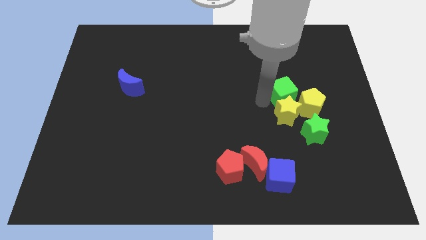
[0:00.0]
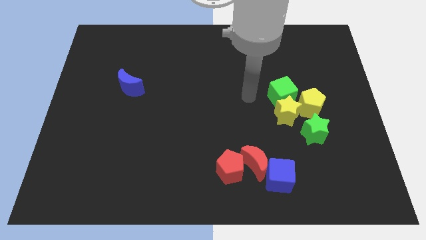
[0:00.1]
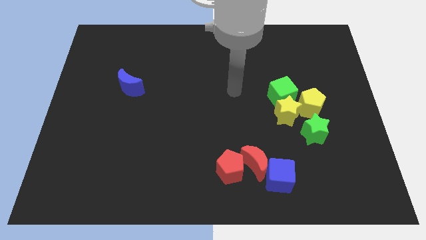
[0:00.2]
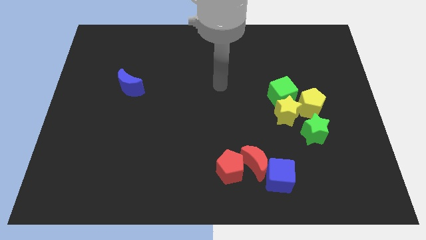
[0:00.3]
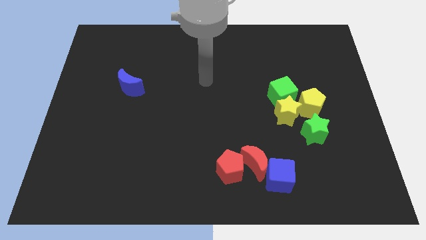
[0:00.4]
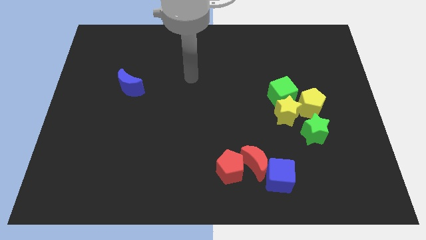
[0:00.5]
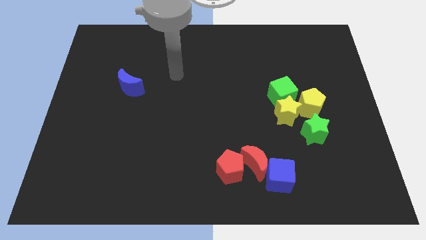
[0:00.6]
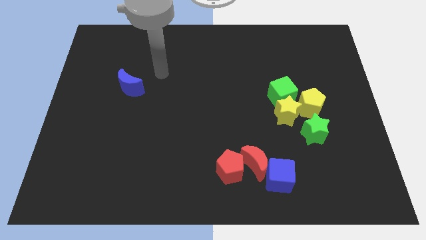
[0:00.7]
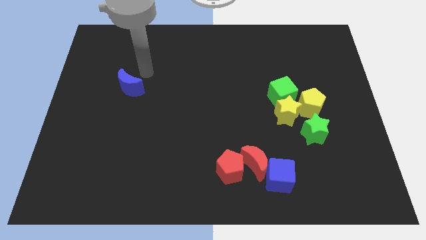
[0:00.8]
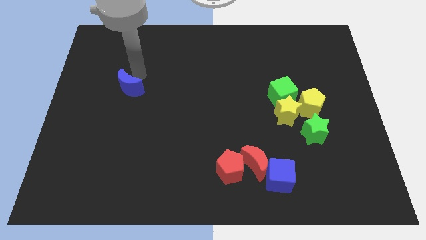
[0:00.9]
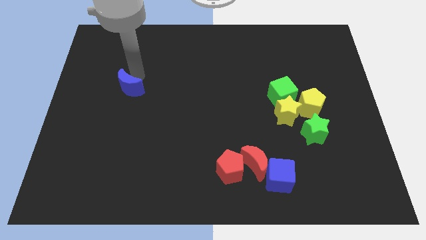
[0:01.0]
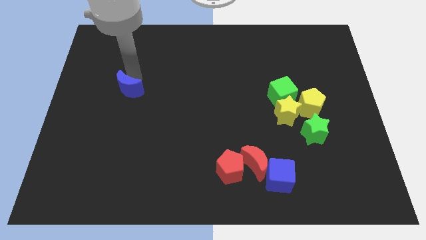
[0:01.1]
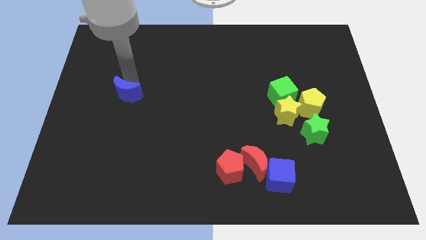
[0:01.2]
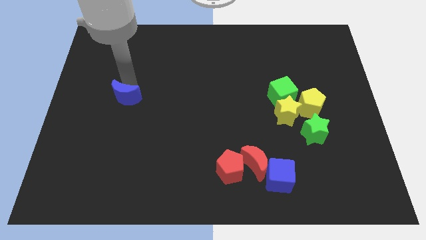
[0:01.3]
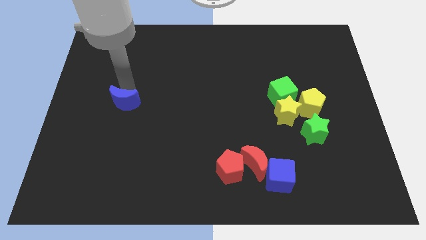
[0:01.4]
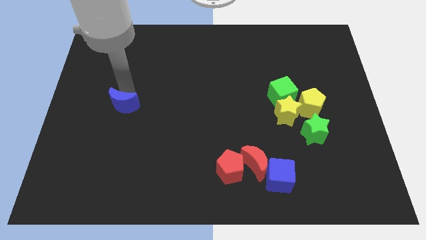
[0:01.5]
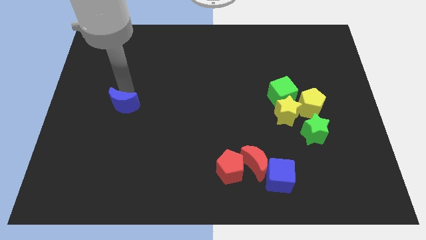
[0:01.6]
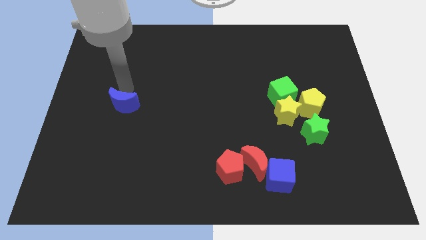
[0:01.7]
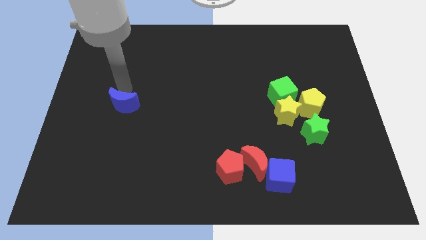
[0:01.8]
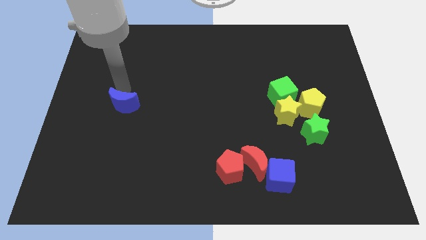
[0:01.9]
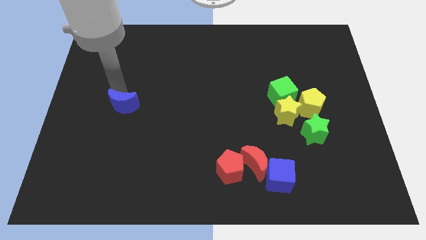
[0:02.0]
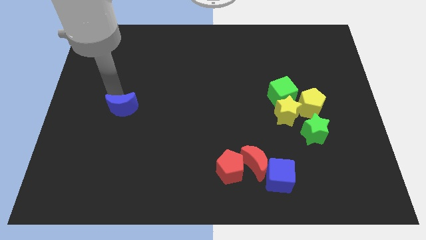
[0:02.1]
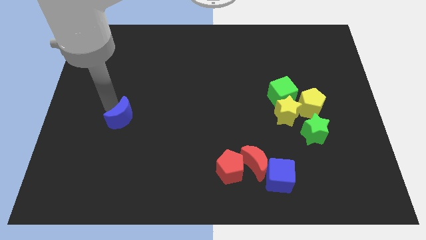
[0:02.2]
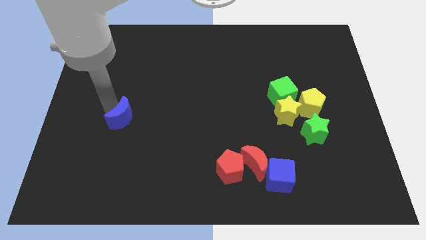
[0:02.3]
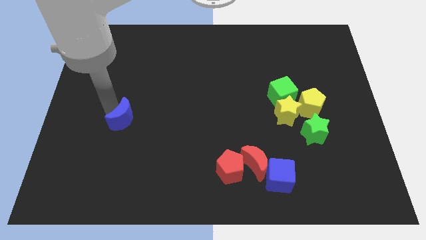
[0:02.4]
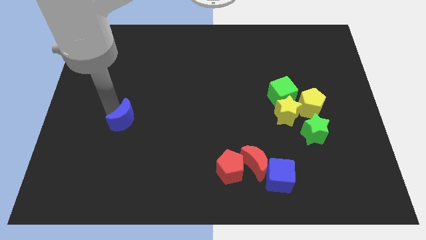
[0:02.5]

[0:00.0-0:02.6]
push the blue moon towards the bottom of the board

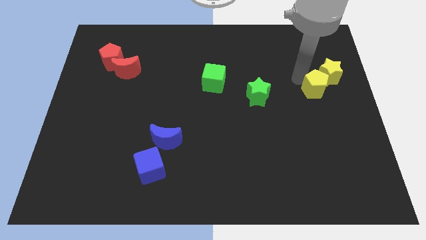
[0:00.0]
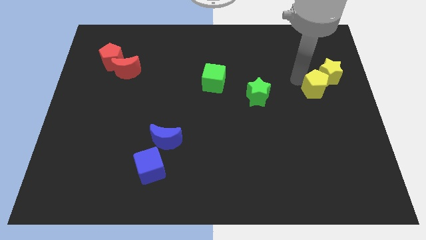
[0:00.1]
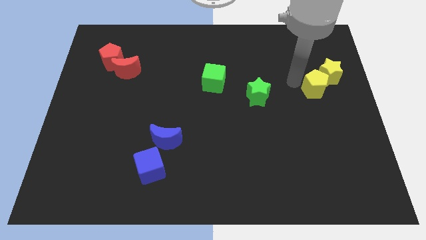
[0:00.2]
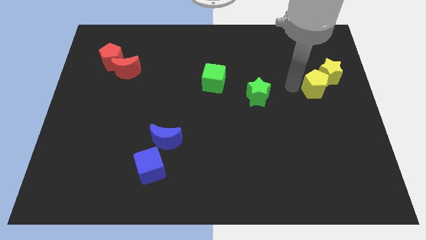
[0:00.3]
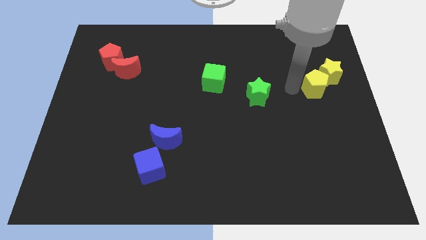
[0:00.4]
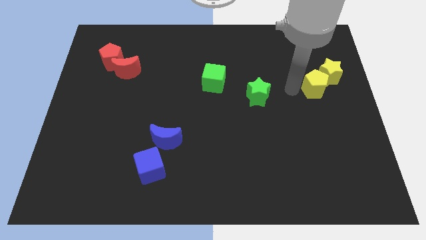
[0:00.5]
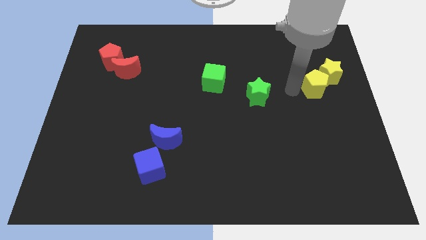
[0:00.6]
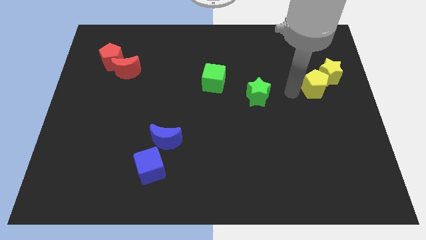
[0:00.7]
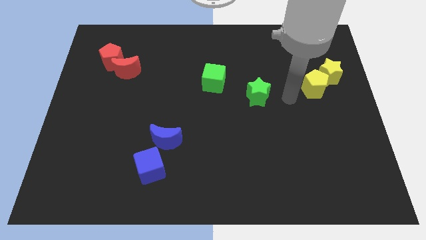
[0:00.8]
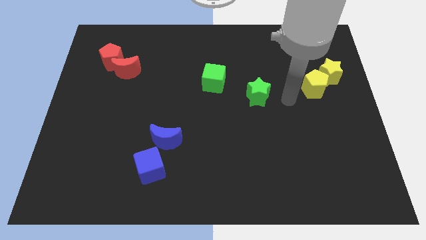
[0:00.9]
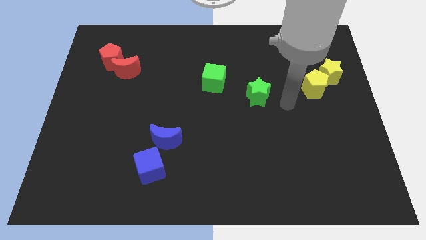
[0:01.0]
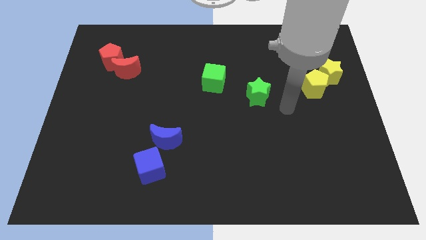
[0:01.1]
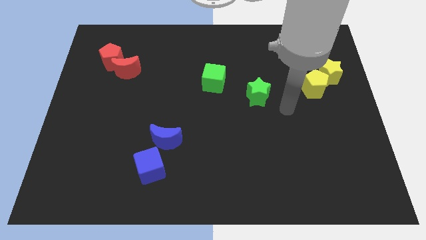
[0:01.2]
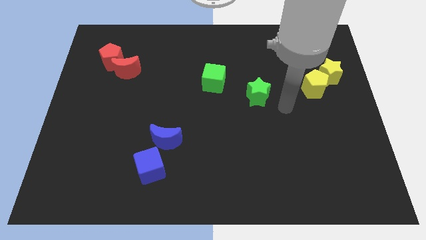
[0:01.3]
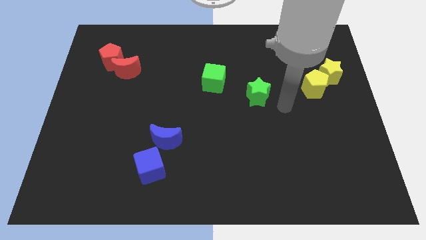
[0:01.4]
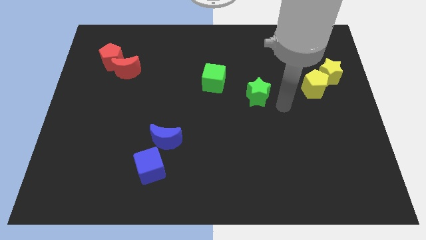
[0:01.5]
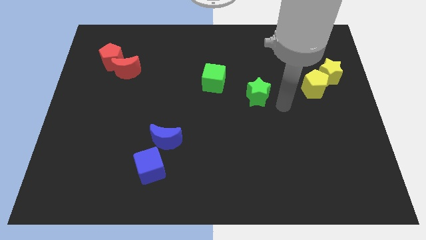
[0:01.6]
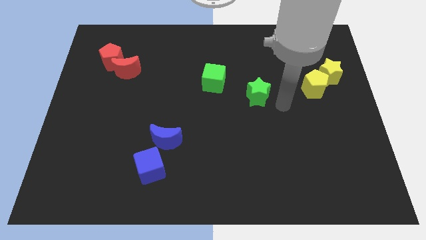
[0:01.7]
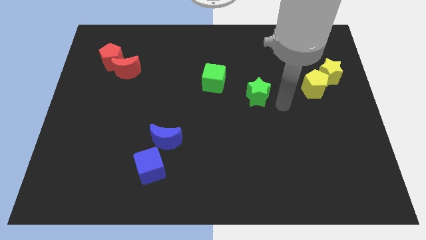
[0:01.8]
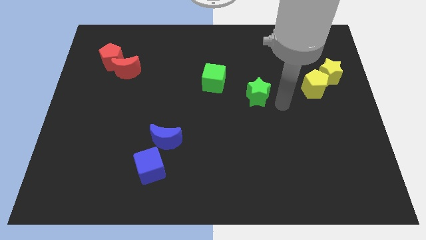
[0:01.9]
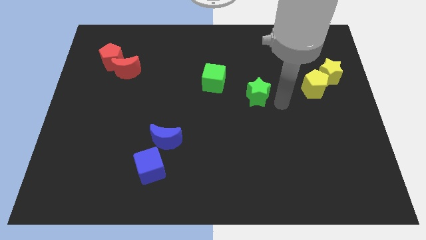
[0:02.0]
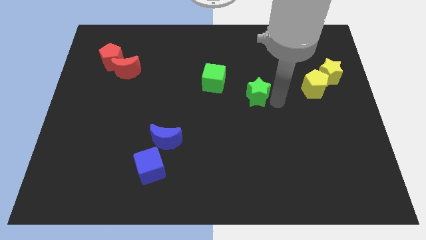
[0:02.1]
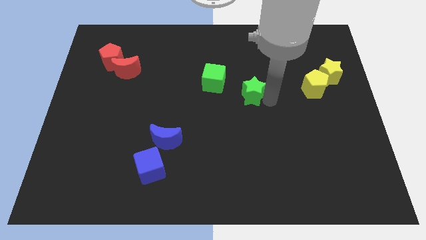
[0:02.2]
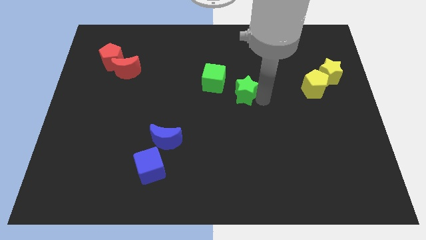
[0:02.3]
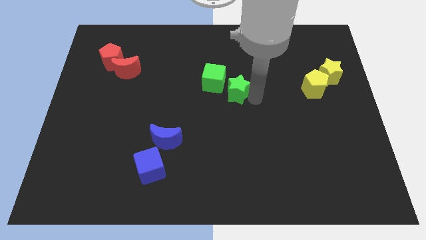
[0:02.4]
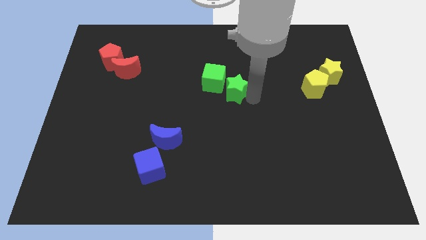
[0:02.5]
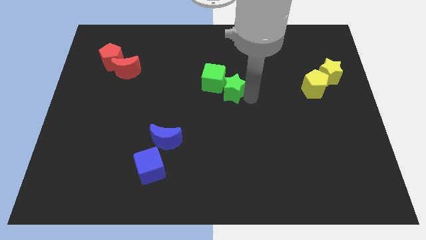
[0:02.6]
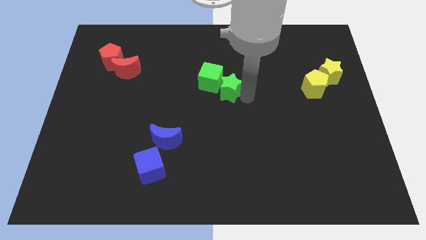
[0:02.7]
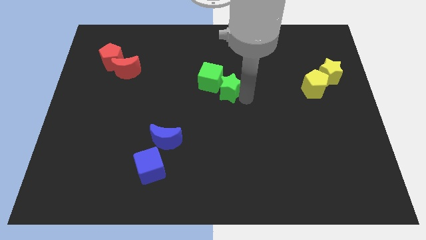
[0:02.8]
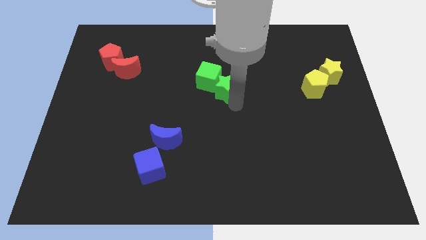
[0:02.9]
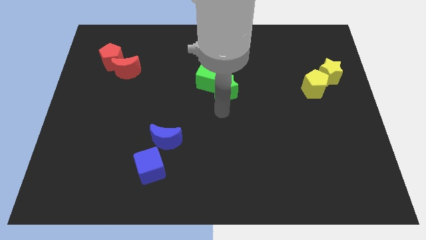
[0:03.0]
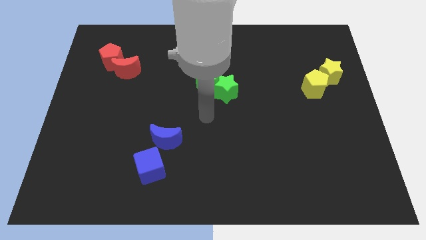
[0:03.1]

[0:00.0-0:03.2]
push the green star to the bottom right of the green cube

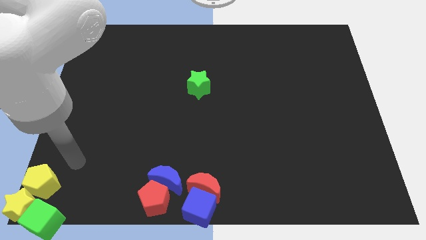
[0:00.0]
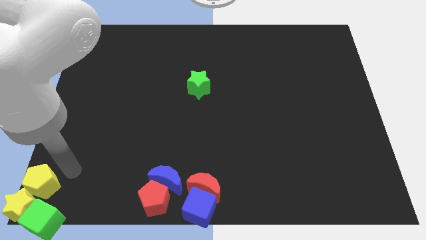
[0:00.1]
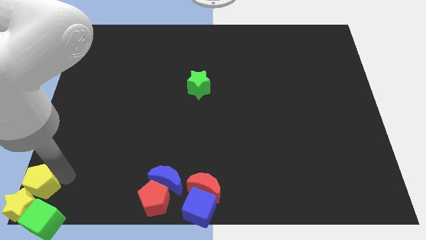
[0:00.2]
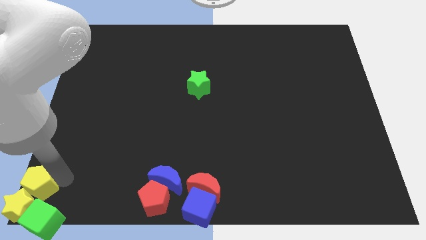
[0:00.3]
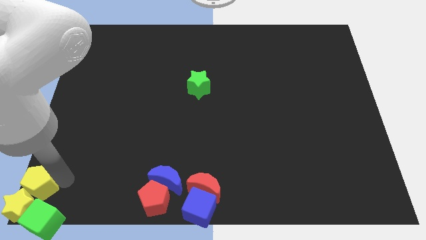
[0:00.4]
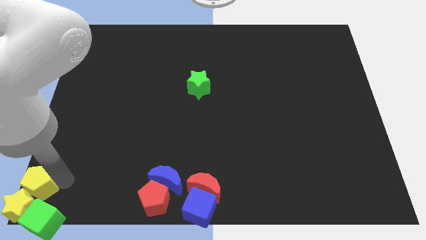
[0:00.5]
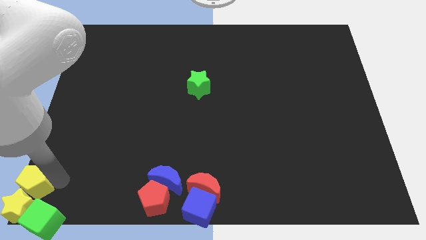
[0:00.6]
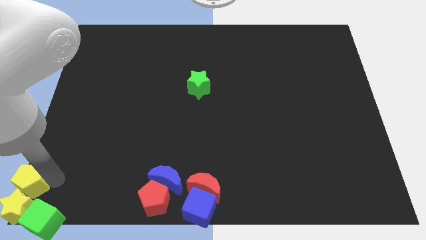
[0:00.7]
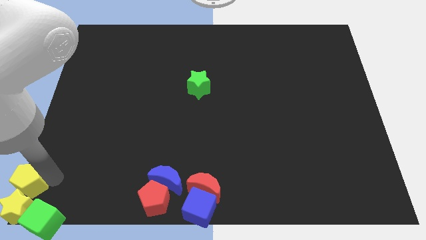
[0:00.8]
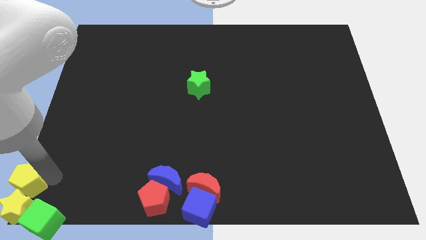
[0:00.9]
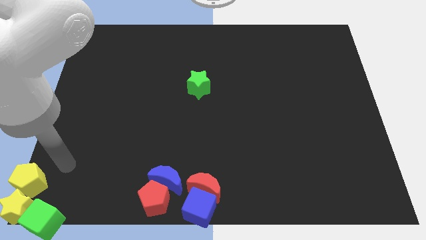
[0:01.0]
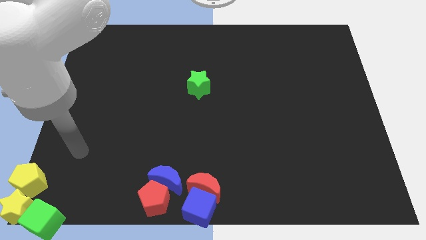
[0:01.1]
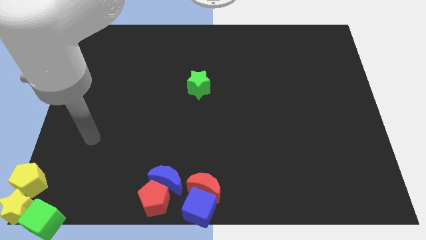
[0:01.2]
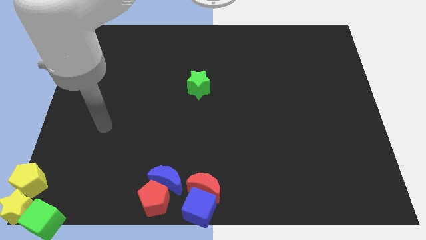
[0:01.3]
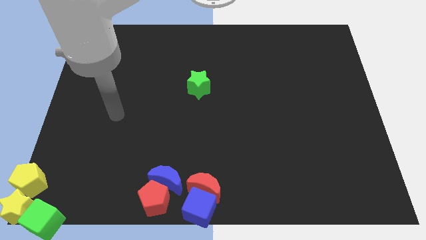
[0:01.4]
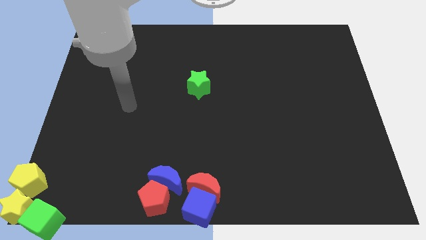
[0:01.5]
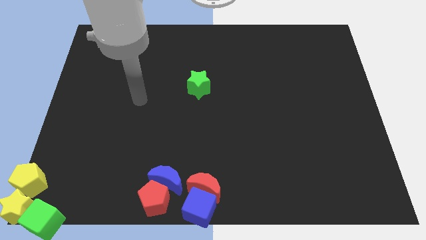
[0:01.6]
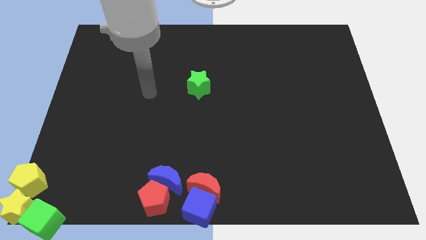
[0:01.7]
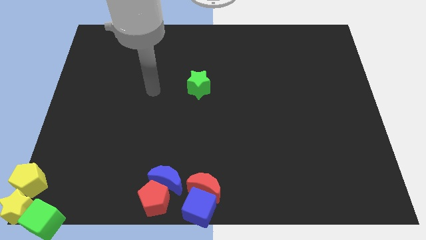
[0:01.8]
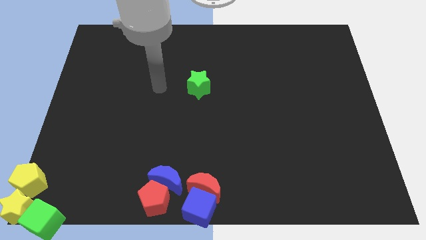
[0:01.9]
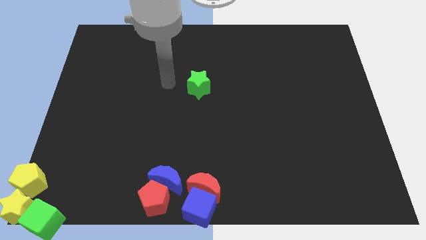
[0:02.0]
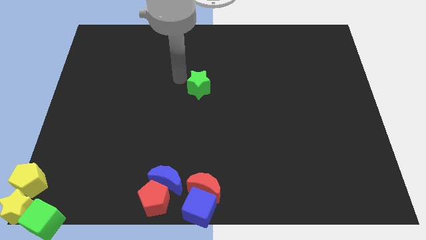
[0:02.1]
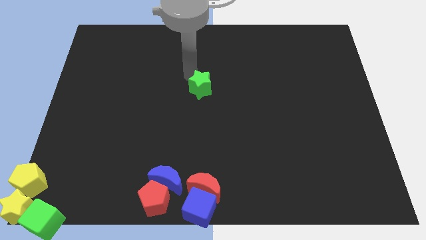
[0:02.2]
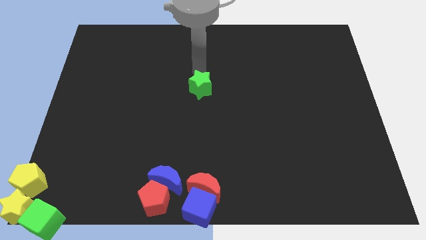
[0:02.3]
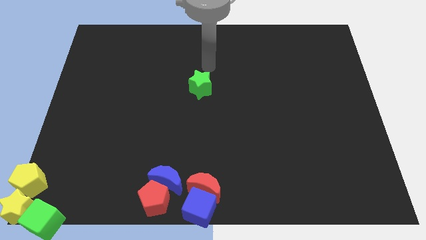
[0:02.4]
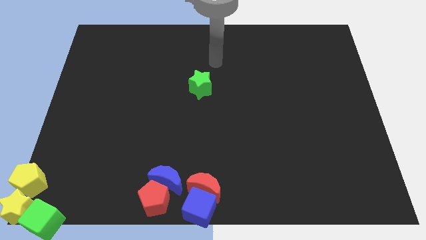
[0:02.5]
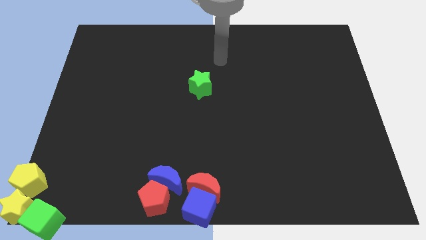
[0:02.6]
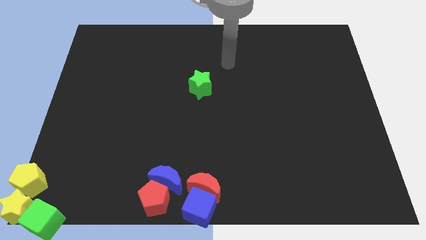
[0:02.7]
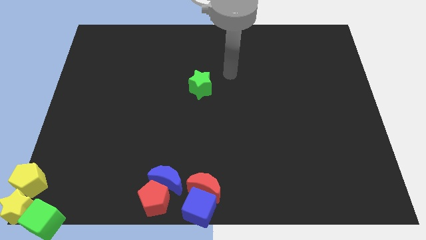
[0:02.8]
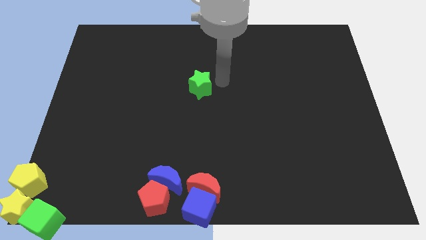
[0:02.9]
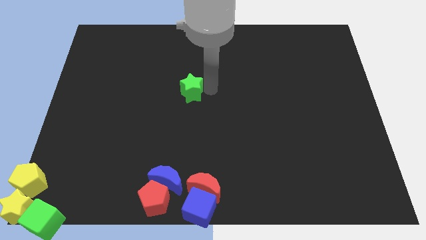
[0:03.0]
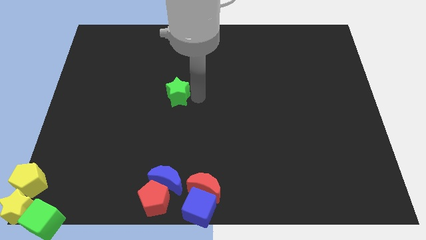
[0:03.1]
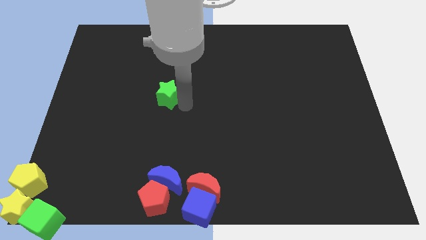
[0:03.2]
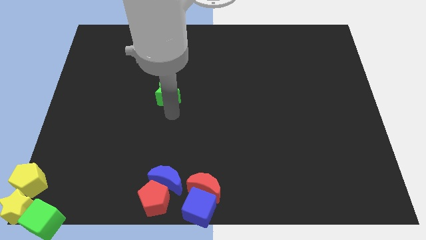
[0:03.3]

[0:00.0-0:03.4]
move the green star towards left down
